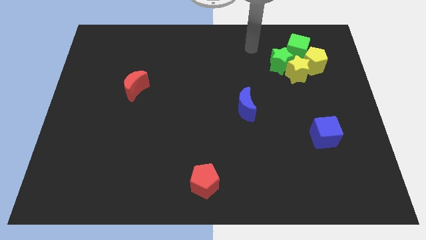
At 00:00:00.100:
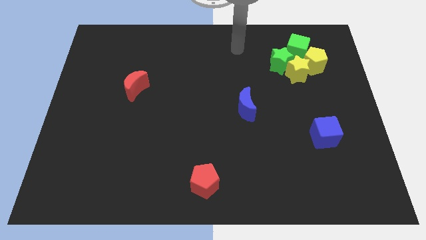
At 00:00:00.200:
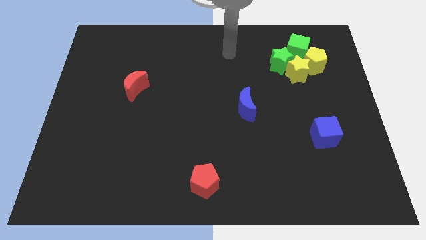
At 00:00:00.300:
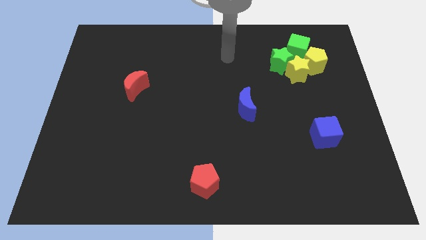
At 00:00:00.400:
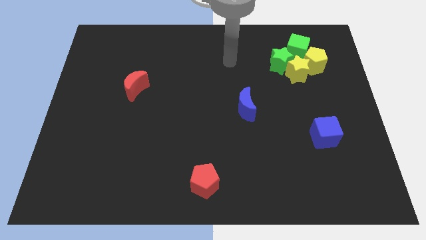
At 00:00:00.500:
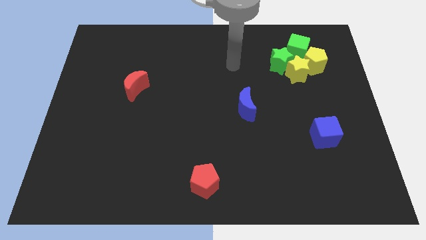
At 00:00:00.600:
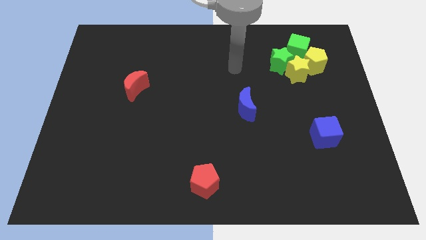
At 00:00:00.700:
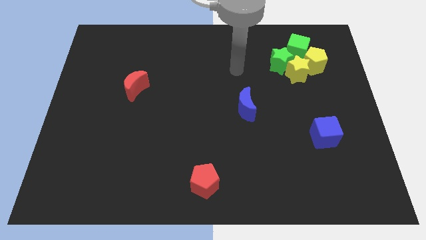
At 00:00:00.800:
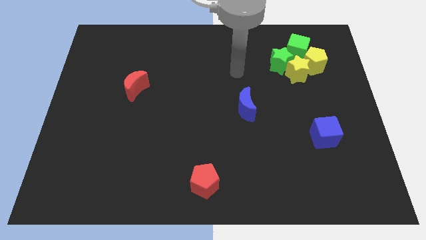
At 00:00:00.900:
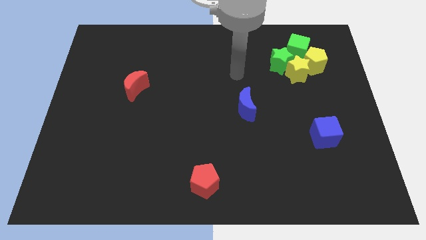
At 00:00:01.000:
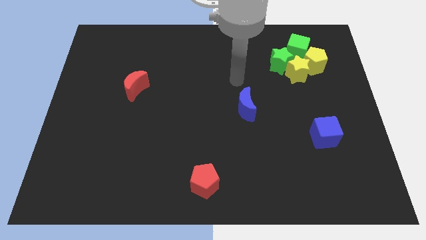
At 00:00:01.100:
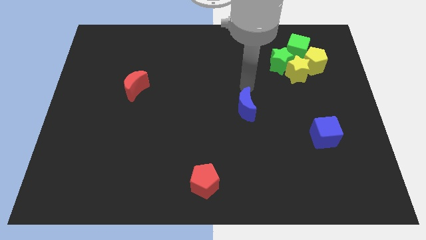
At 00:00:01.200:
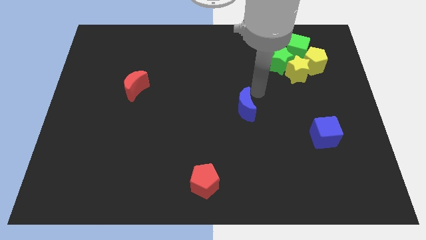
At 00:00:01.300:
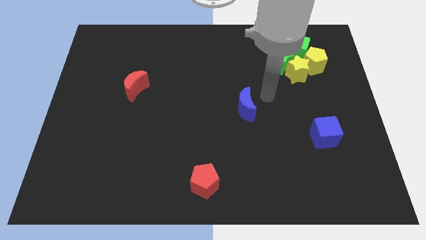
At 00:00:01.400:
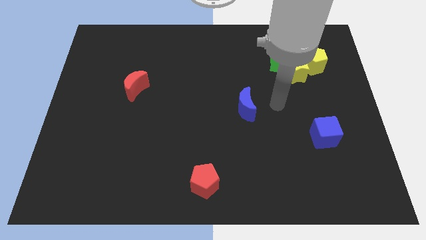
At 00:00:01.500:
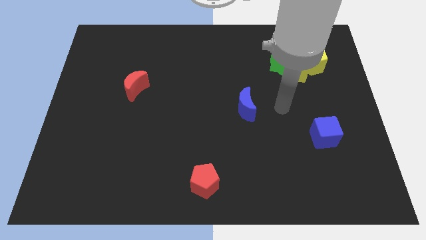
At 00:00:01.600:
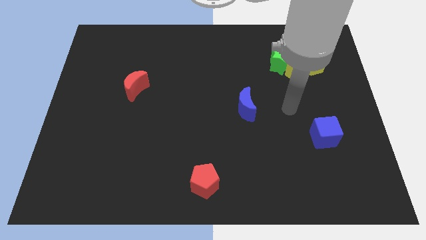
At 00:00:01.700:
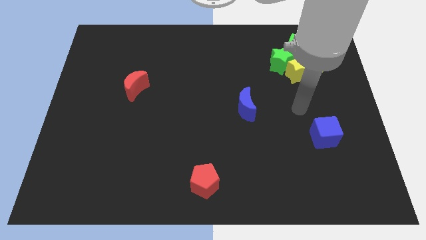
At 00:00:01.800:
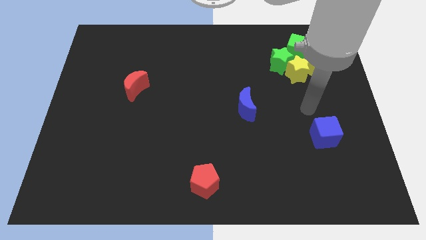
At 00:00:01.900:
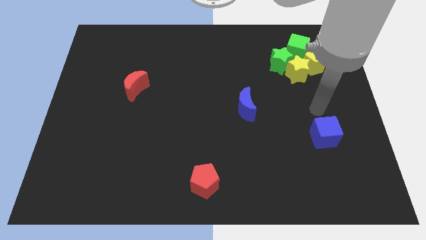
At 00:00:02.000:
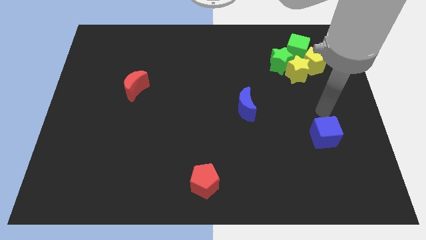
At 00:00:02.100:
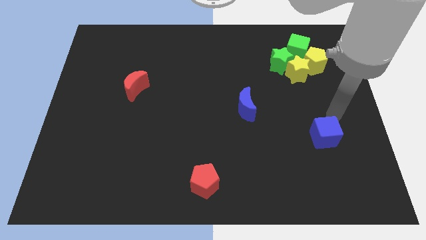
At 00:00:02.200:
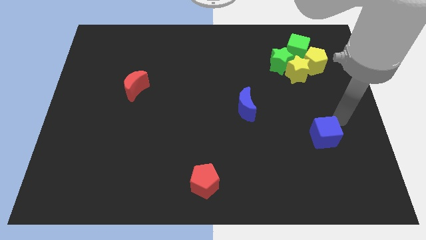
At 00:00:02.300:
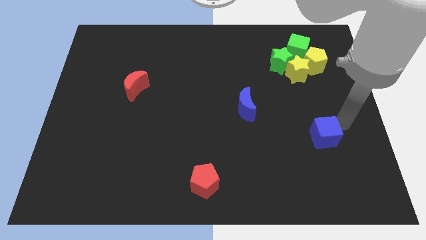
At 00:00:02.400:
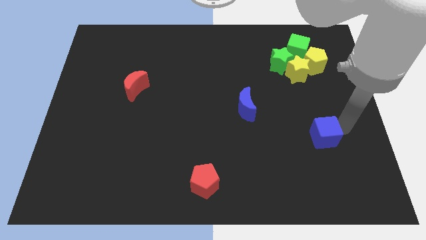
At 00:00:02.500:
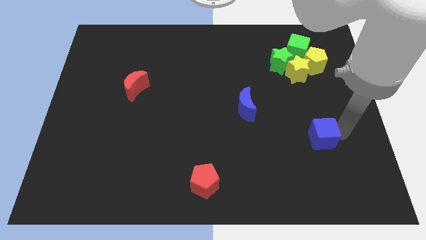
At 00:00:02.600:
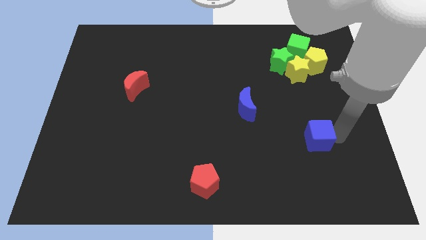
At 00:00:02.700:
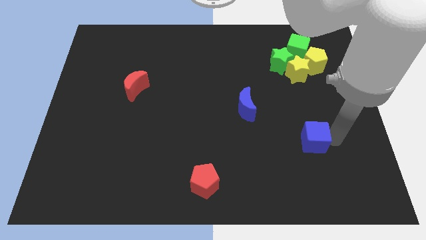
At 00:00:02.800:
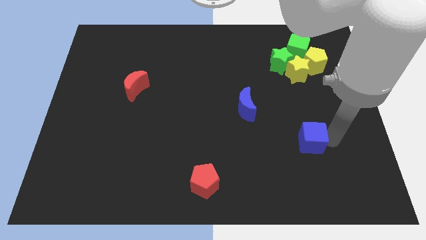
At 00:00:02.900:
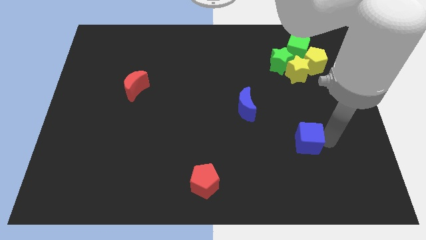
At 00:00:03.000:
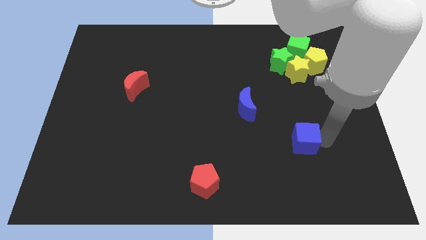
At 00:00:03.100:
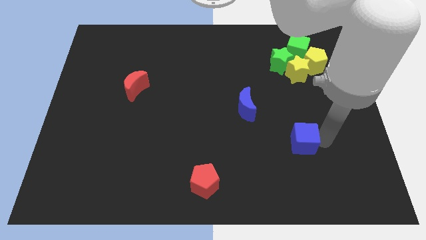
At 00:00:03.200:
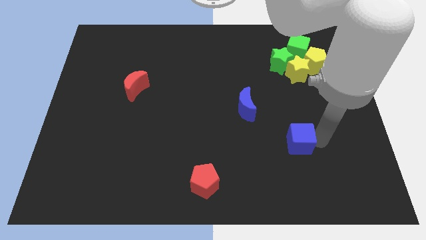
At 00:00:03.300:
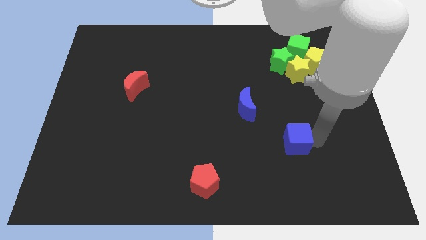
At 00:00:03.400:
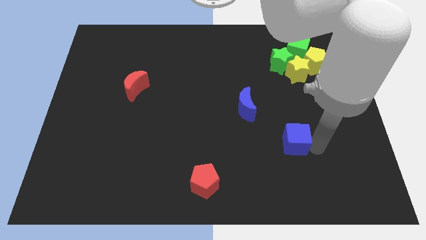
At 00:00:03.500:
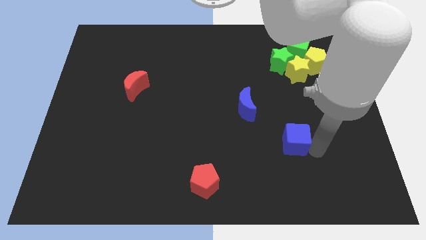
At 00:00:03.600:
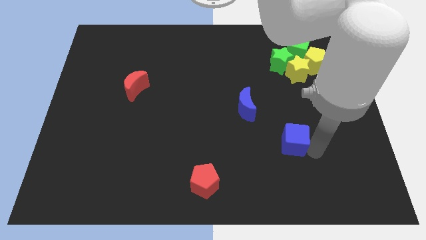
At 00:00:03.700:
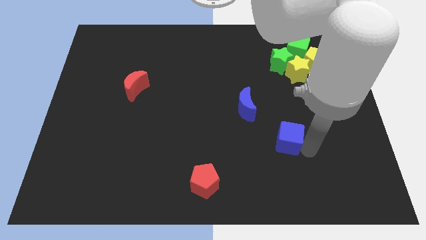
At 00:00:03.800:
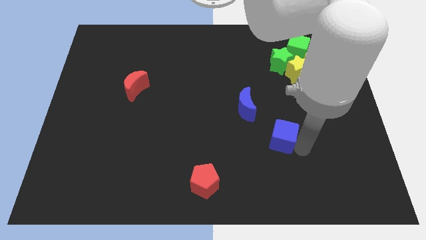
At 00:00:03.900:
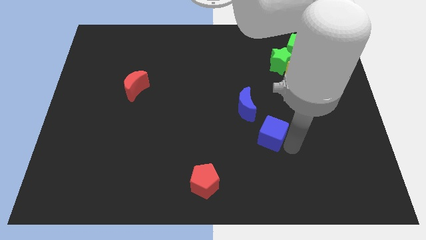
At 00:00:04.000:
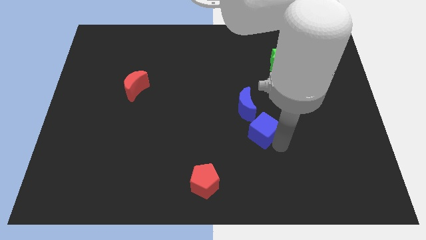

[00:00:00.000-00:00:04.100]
join the blue cube with the blue crescent

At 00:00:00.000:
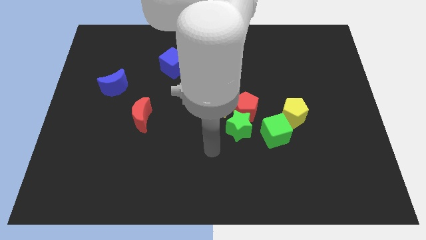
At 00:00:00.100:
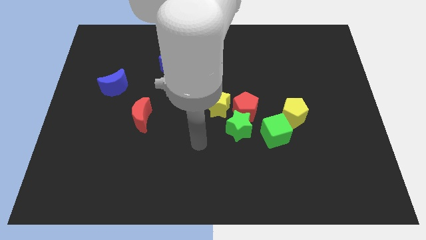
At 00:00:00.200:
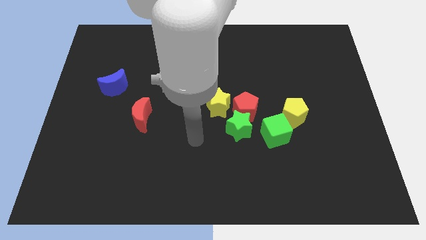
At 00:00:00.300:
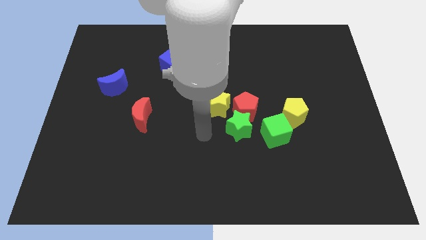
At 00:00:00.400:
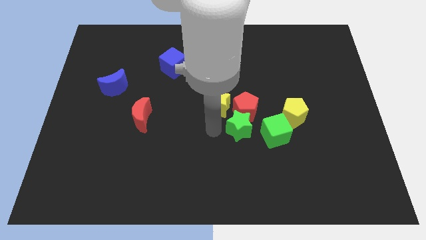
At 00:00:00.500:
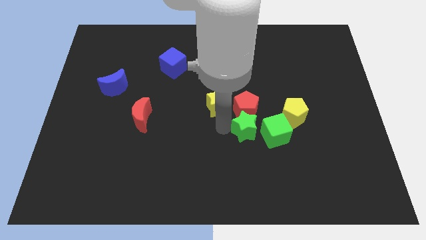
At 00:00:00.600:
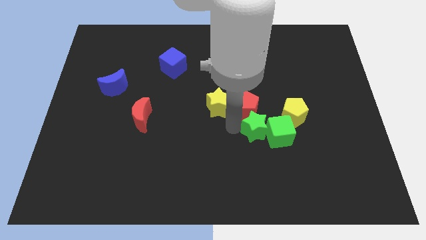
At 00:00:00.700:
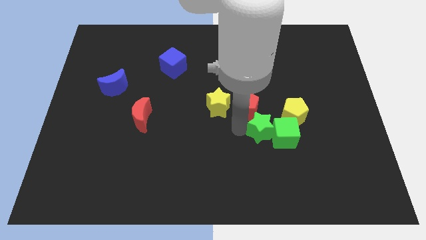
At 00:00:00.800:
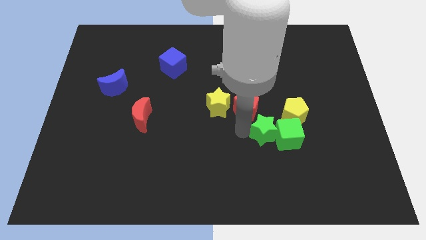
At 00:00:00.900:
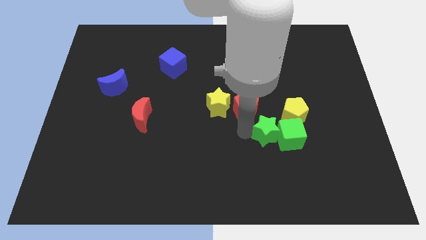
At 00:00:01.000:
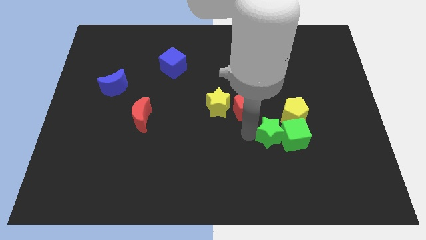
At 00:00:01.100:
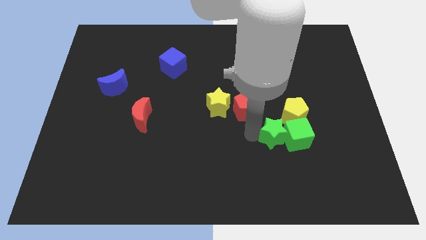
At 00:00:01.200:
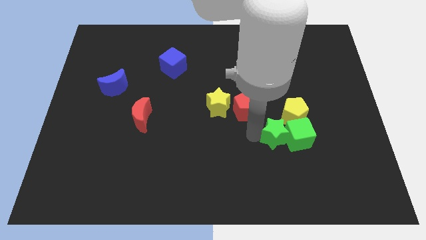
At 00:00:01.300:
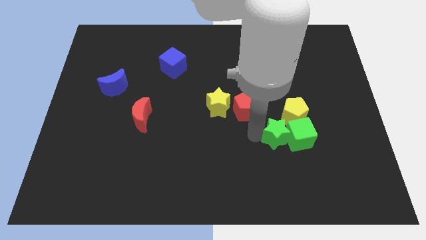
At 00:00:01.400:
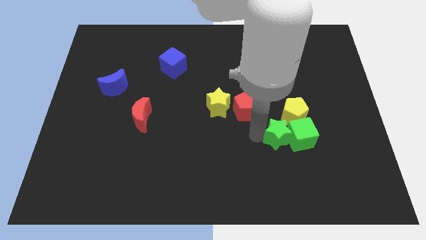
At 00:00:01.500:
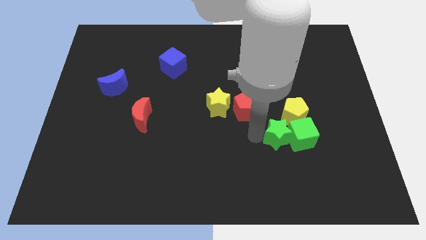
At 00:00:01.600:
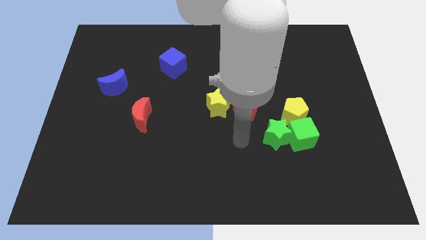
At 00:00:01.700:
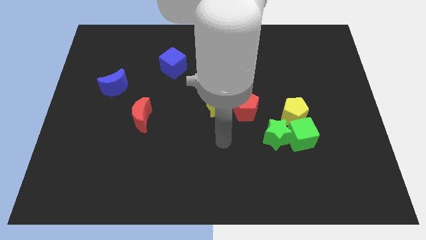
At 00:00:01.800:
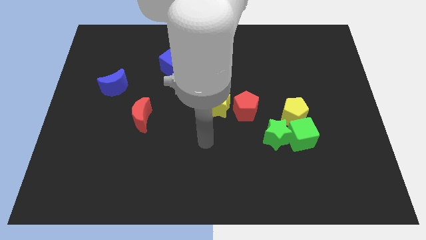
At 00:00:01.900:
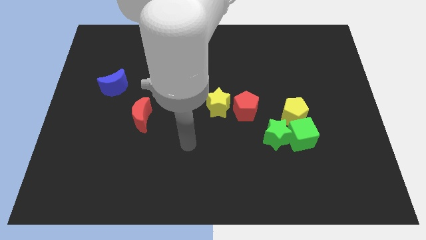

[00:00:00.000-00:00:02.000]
push the green star into the green cube

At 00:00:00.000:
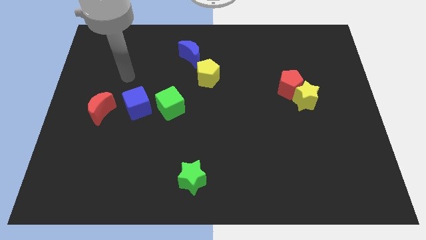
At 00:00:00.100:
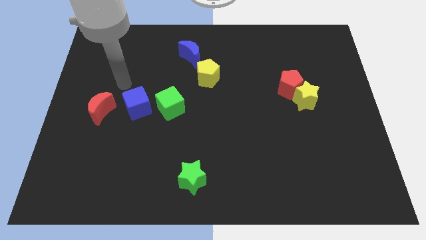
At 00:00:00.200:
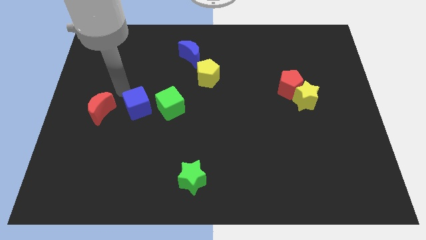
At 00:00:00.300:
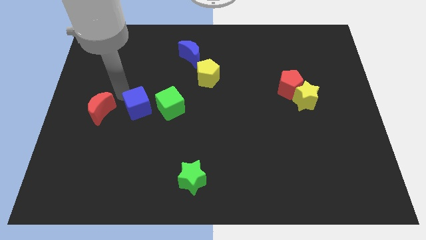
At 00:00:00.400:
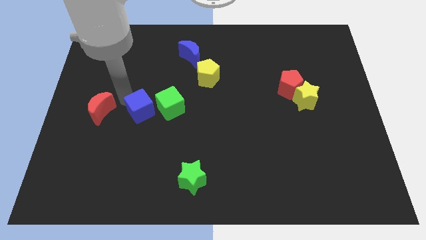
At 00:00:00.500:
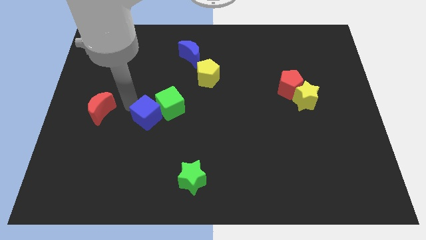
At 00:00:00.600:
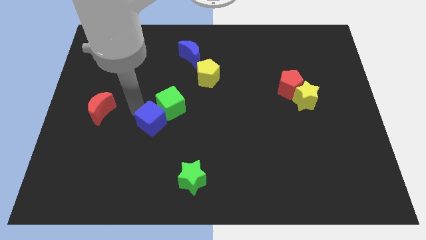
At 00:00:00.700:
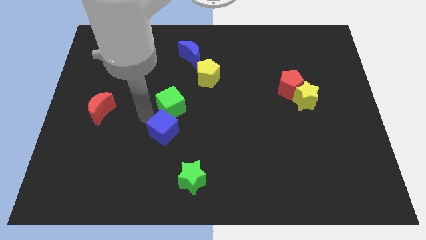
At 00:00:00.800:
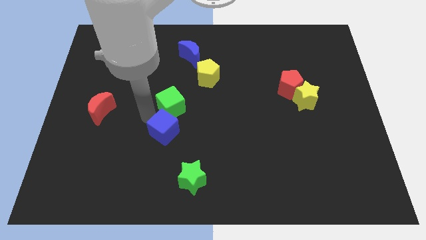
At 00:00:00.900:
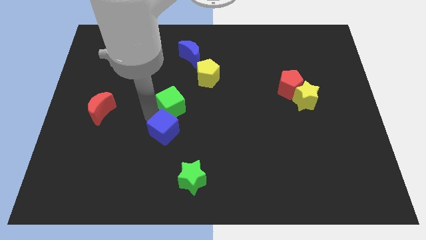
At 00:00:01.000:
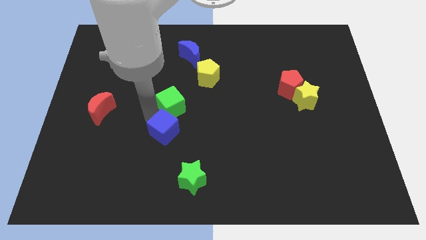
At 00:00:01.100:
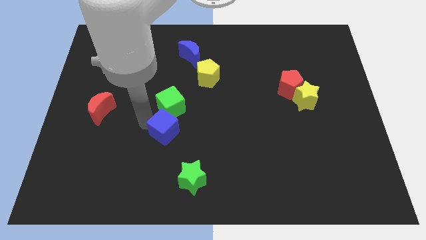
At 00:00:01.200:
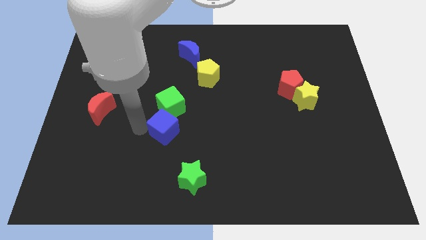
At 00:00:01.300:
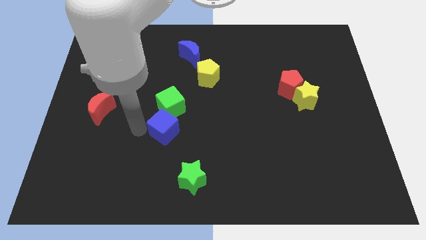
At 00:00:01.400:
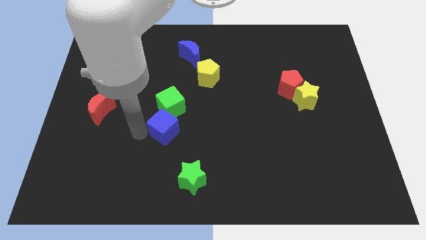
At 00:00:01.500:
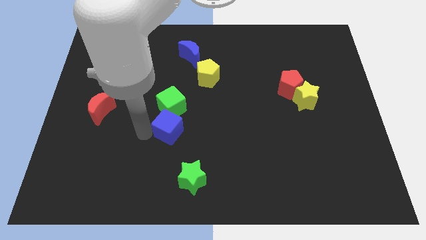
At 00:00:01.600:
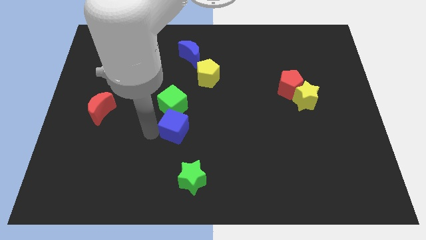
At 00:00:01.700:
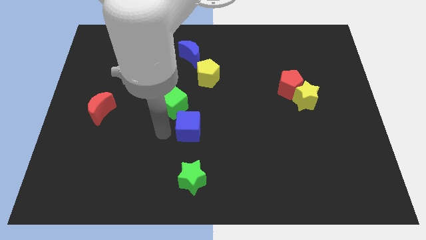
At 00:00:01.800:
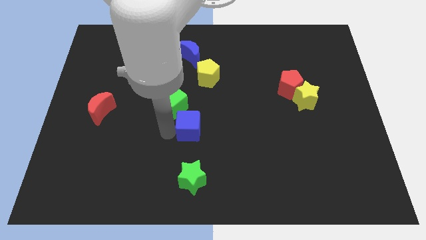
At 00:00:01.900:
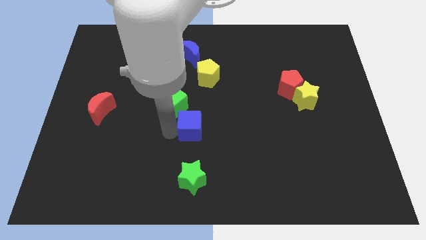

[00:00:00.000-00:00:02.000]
place the blue cube above the green star

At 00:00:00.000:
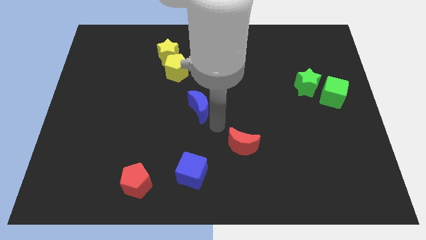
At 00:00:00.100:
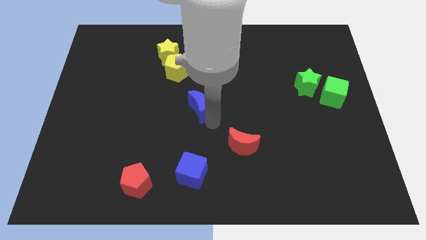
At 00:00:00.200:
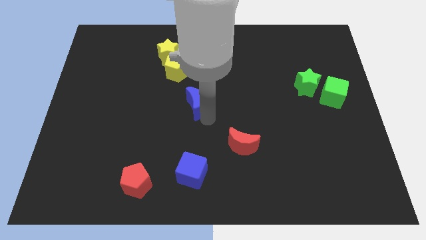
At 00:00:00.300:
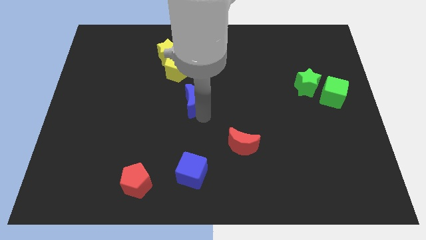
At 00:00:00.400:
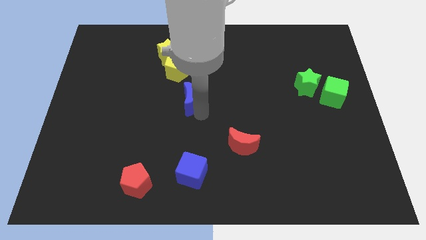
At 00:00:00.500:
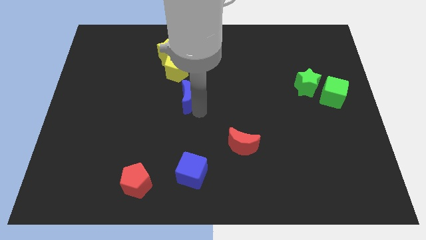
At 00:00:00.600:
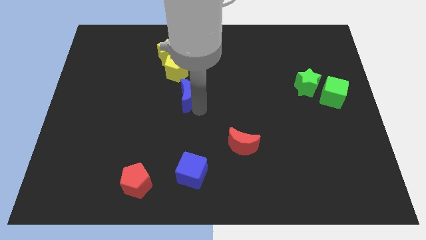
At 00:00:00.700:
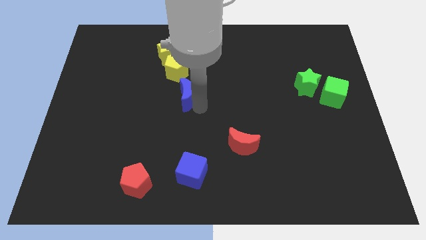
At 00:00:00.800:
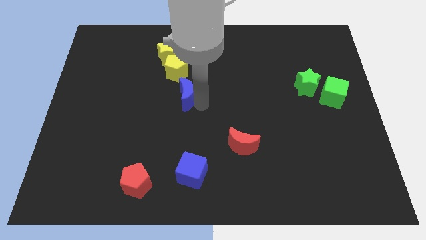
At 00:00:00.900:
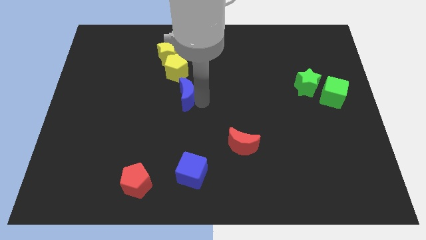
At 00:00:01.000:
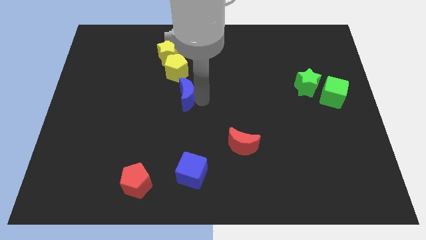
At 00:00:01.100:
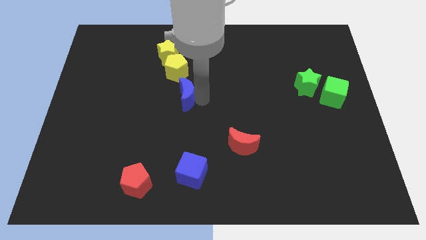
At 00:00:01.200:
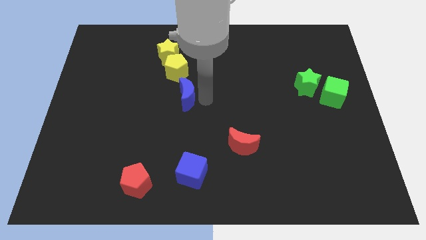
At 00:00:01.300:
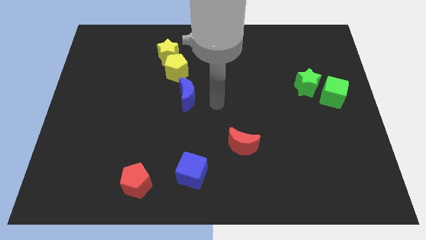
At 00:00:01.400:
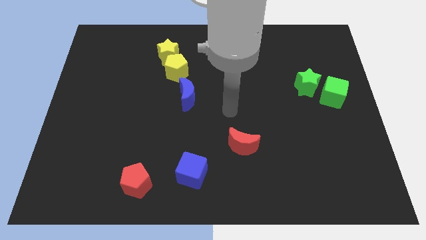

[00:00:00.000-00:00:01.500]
place the blue crescent vertically to the top side of the blue cube
